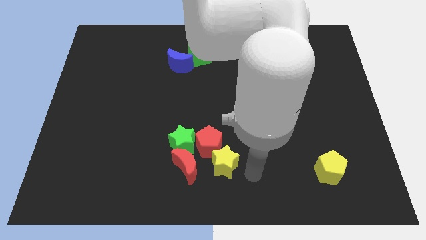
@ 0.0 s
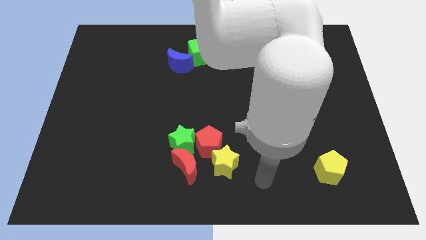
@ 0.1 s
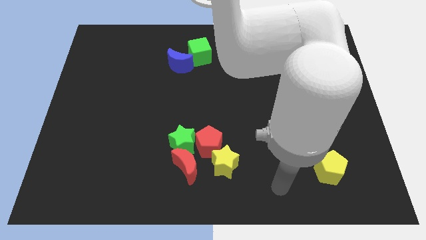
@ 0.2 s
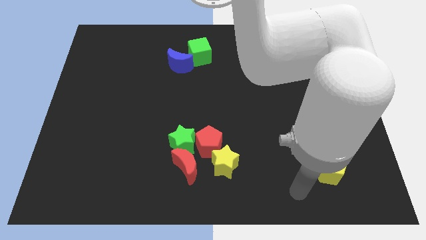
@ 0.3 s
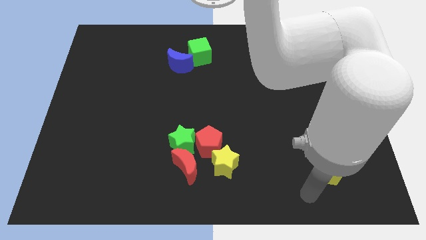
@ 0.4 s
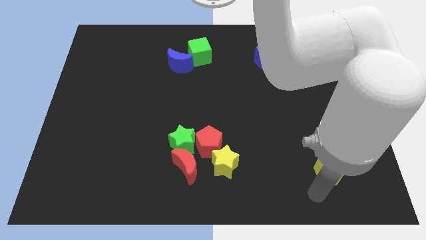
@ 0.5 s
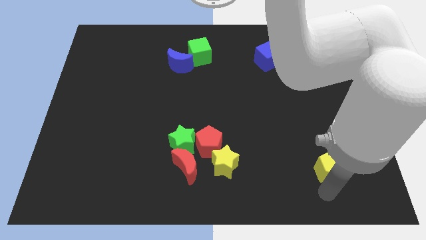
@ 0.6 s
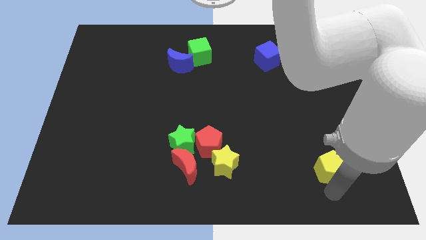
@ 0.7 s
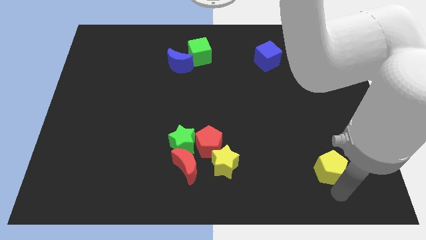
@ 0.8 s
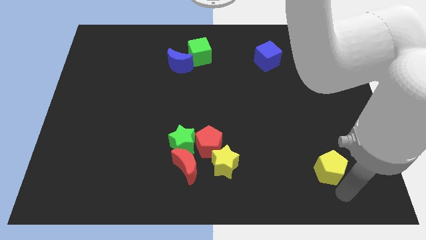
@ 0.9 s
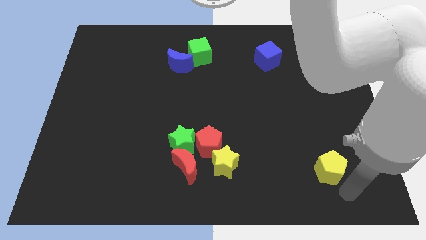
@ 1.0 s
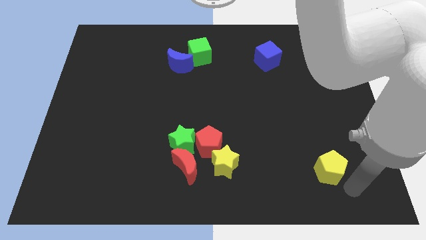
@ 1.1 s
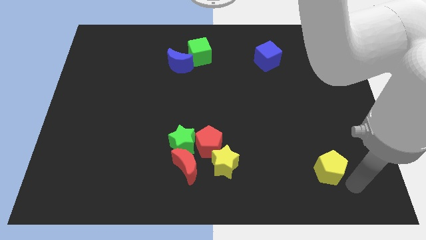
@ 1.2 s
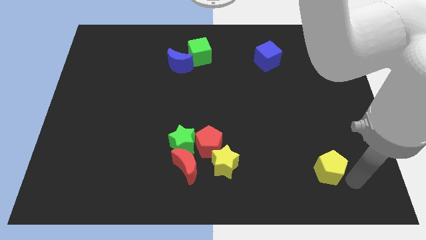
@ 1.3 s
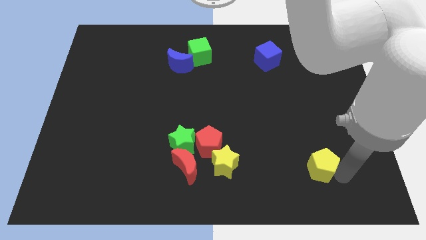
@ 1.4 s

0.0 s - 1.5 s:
place your arm to the right of yellow pentagon

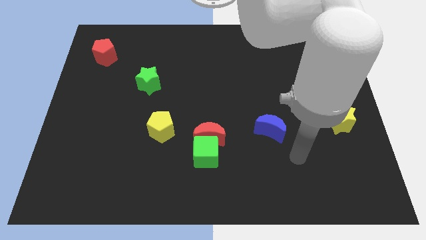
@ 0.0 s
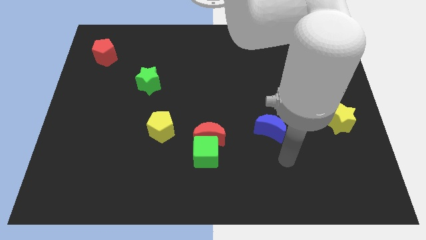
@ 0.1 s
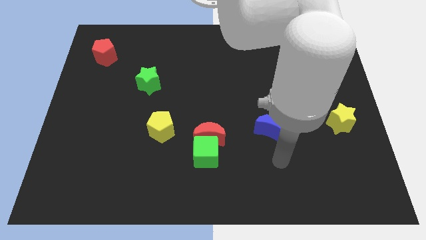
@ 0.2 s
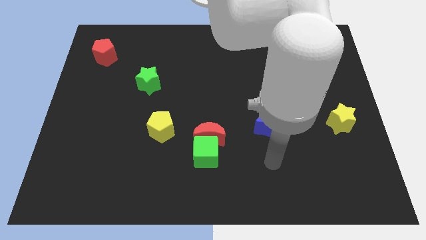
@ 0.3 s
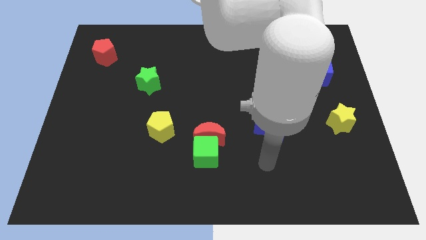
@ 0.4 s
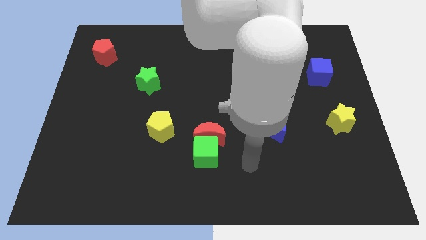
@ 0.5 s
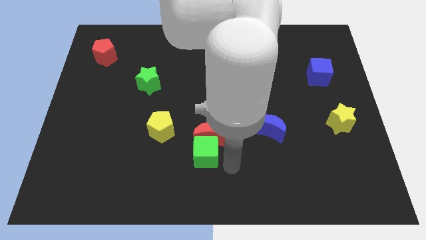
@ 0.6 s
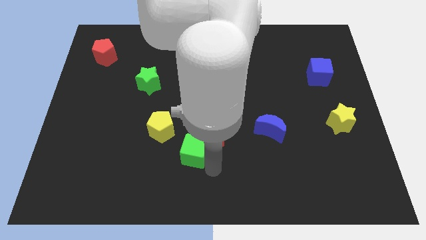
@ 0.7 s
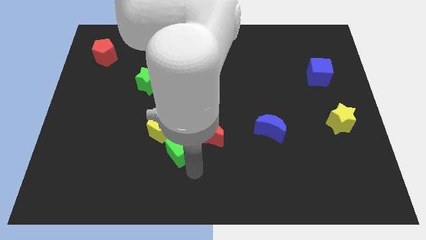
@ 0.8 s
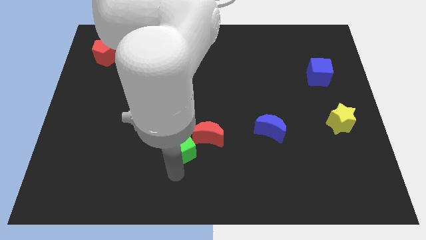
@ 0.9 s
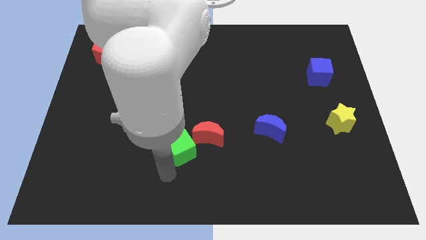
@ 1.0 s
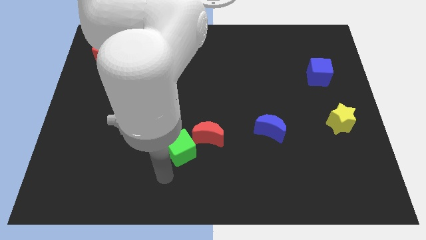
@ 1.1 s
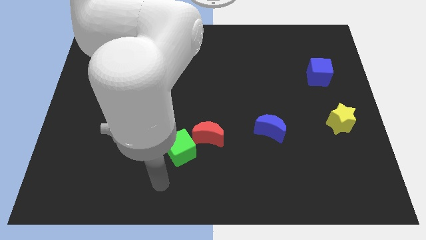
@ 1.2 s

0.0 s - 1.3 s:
separate the green cube from the red crescent

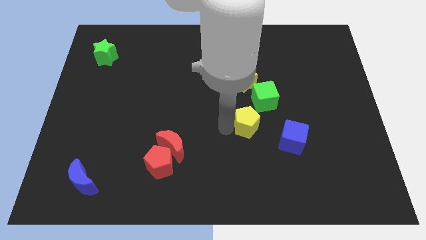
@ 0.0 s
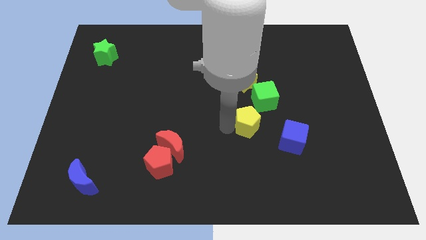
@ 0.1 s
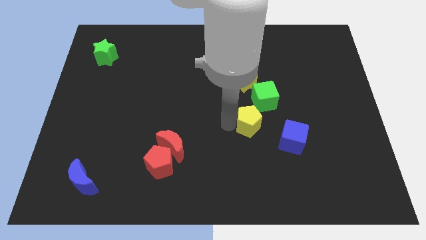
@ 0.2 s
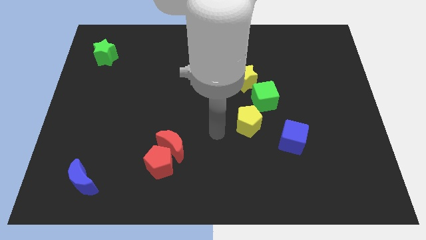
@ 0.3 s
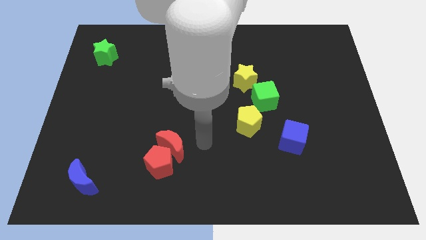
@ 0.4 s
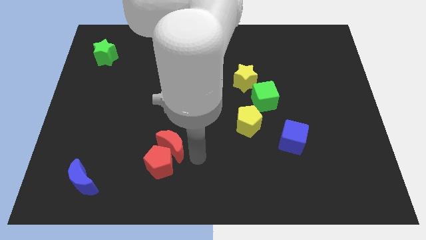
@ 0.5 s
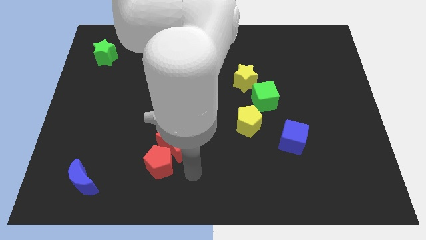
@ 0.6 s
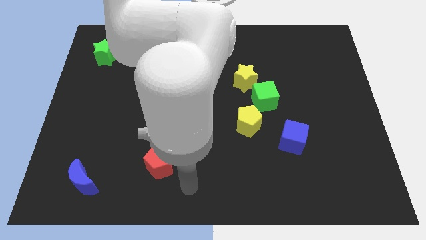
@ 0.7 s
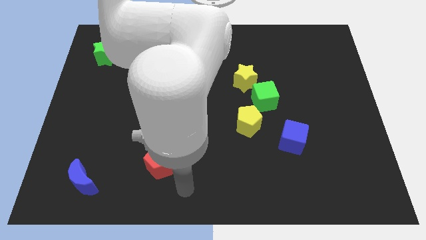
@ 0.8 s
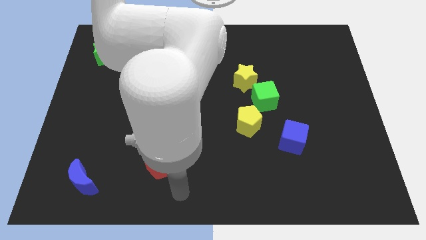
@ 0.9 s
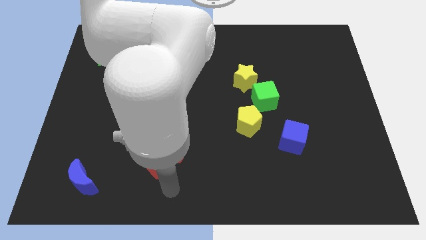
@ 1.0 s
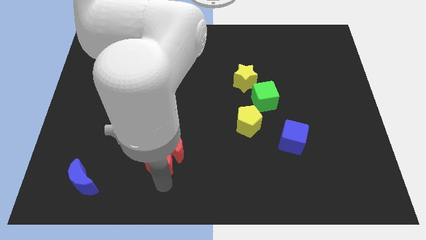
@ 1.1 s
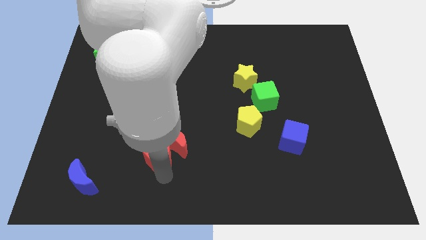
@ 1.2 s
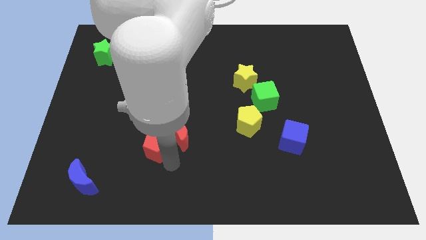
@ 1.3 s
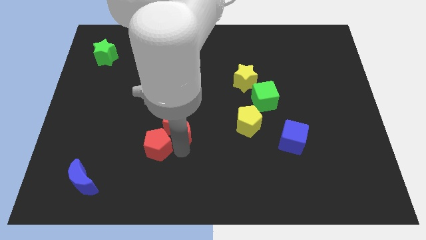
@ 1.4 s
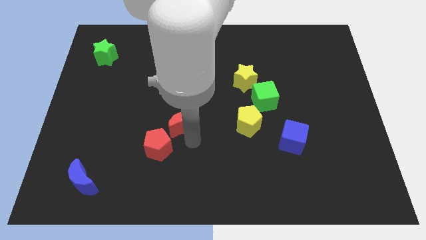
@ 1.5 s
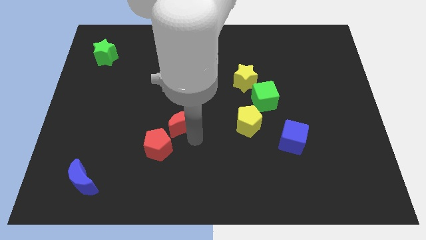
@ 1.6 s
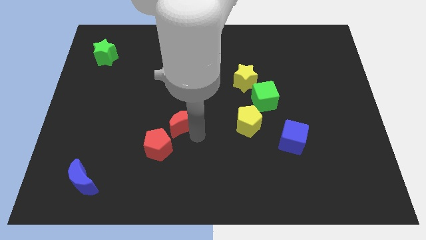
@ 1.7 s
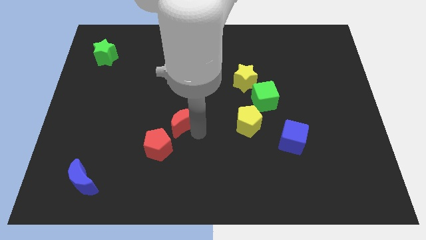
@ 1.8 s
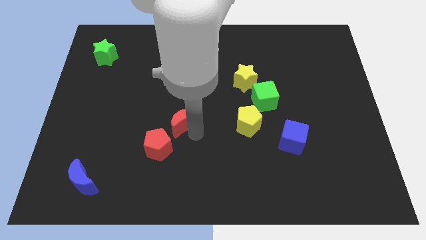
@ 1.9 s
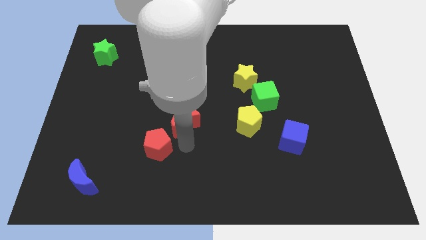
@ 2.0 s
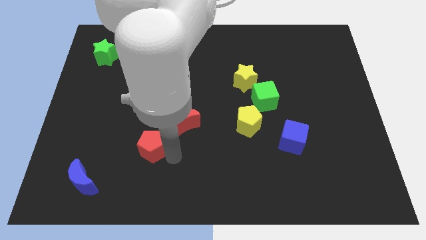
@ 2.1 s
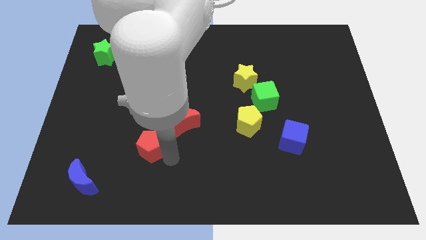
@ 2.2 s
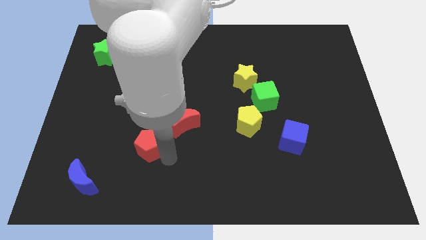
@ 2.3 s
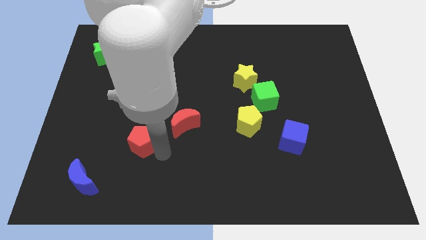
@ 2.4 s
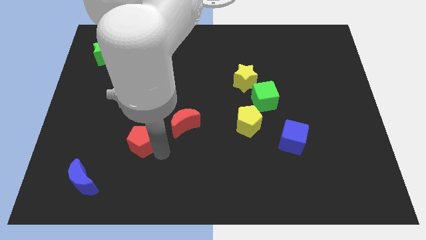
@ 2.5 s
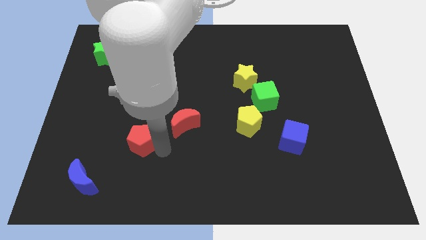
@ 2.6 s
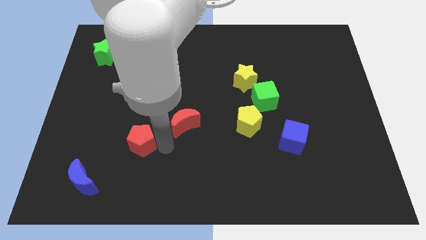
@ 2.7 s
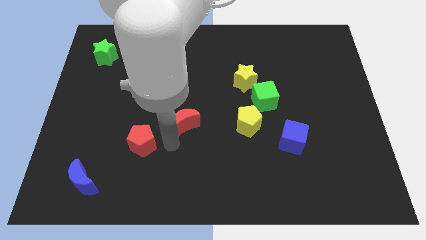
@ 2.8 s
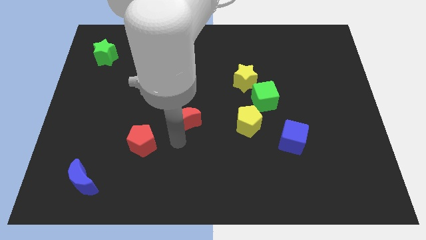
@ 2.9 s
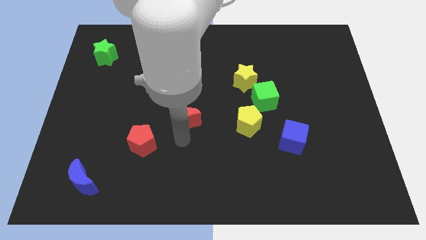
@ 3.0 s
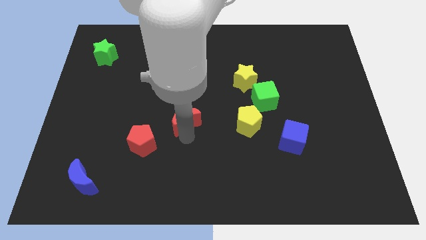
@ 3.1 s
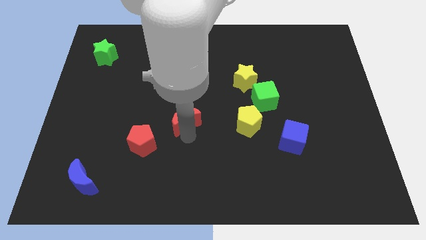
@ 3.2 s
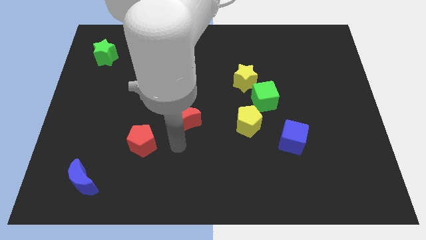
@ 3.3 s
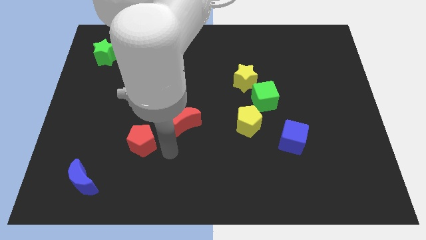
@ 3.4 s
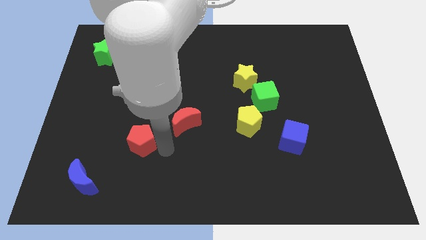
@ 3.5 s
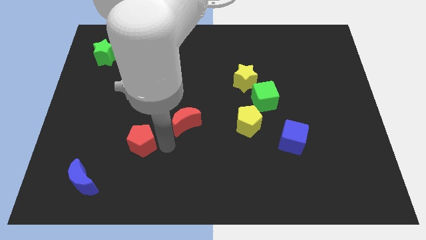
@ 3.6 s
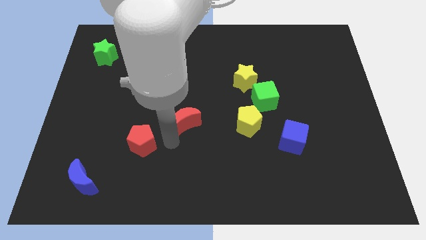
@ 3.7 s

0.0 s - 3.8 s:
slide the red moon diagonally top right to red pentagon

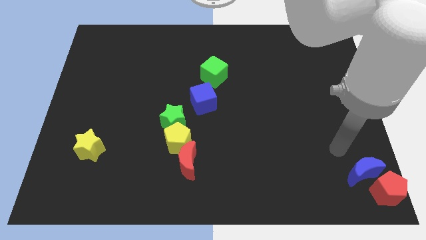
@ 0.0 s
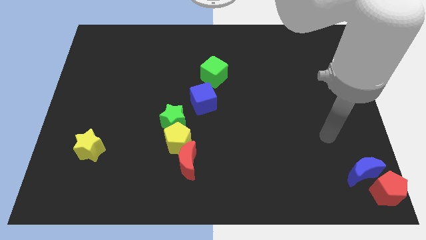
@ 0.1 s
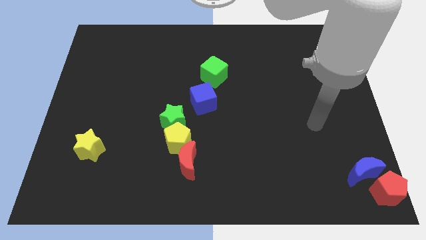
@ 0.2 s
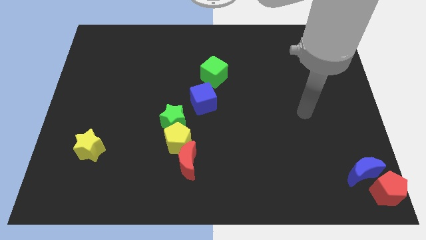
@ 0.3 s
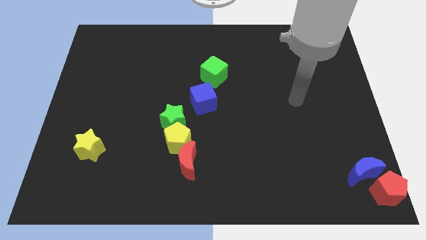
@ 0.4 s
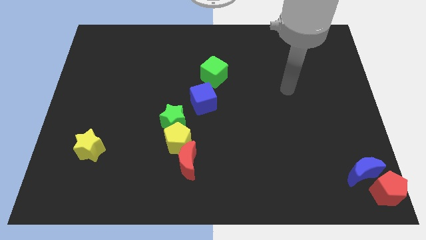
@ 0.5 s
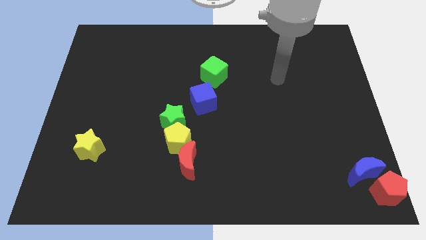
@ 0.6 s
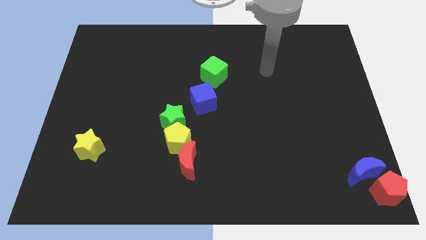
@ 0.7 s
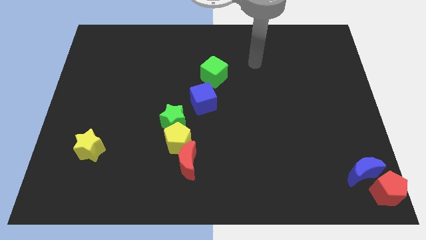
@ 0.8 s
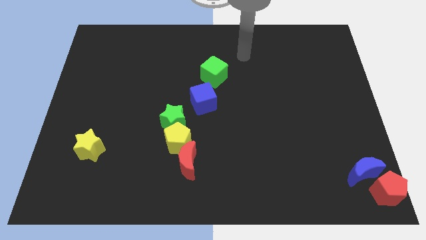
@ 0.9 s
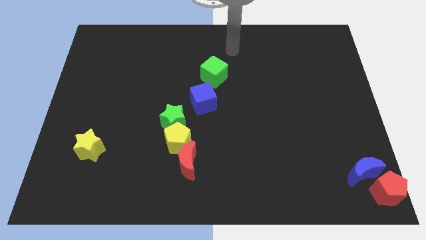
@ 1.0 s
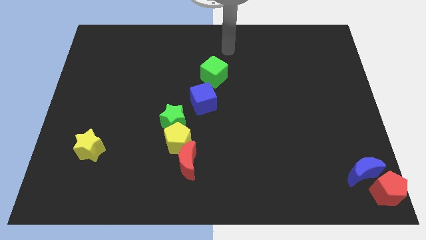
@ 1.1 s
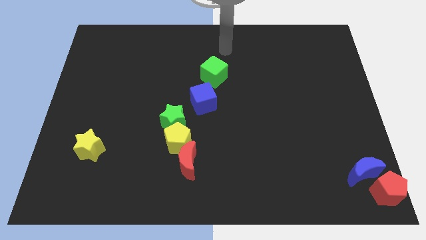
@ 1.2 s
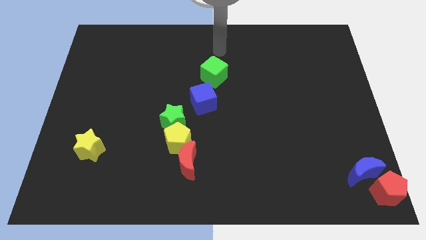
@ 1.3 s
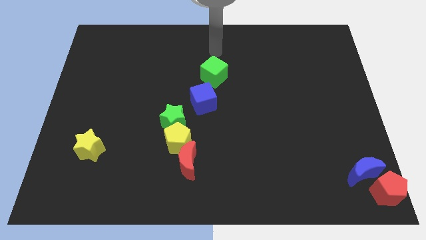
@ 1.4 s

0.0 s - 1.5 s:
place your hand above the green cube

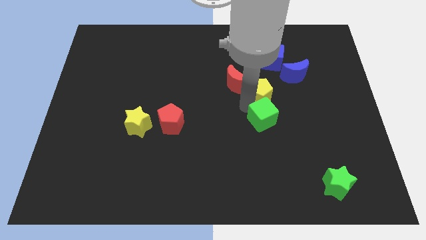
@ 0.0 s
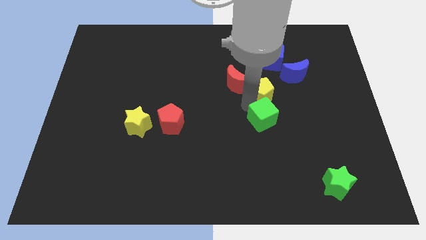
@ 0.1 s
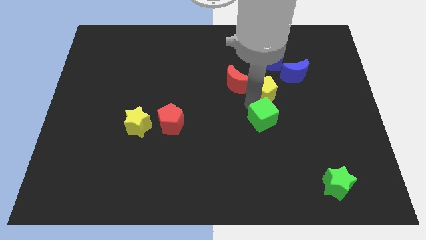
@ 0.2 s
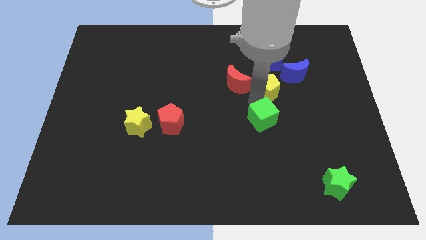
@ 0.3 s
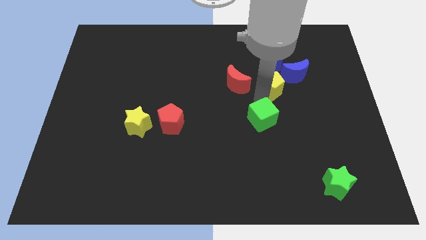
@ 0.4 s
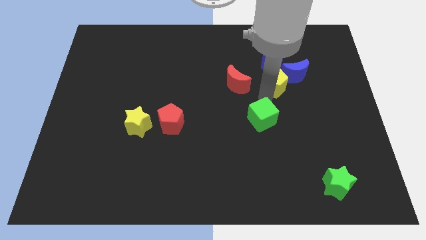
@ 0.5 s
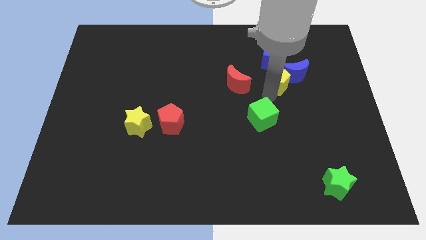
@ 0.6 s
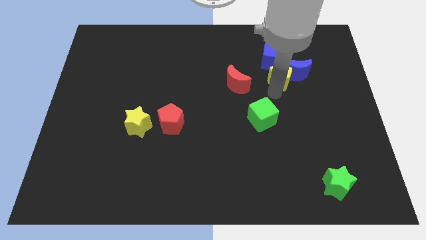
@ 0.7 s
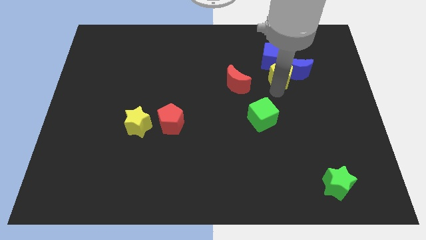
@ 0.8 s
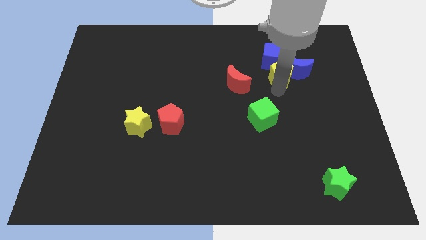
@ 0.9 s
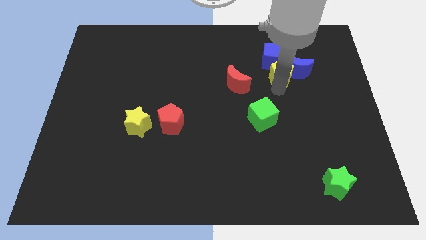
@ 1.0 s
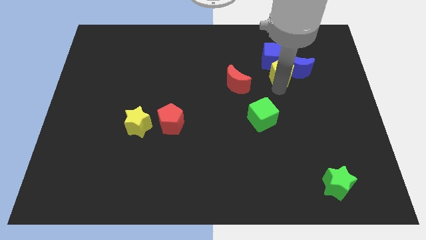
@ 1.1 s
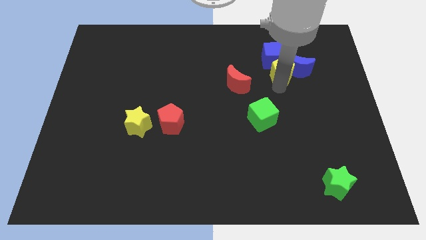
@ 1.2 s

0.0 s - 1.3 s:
move the yellow pentagon to the bottom of the blue cube
